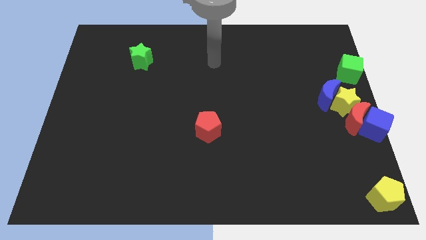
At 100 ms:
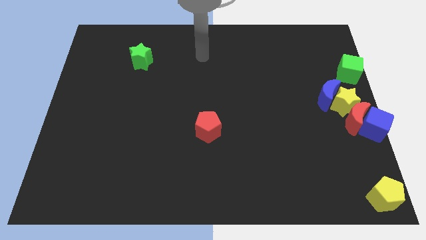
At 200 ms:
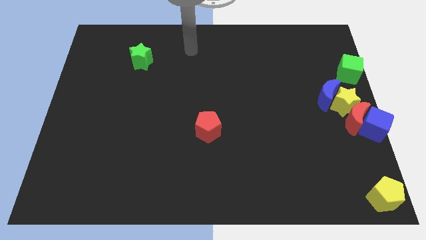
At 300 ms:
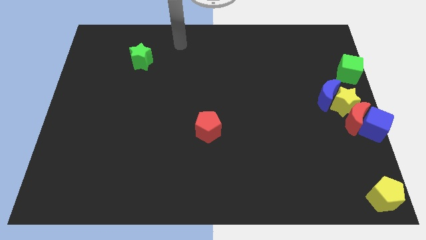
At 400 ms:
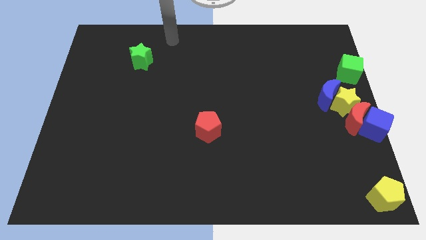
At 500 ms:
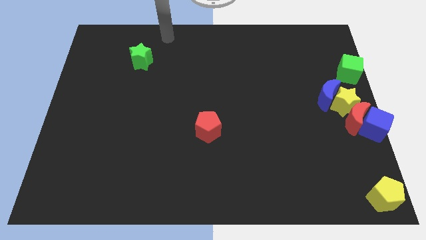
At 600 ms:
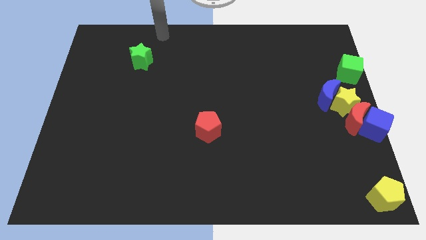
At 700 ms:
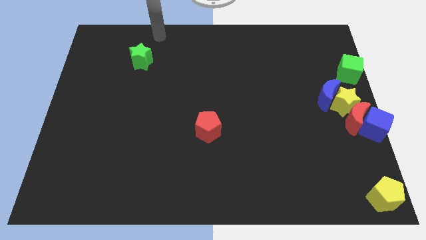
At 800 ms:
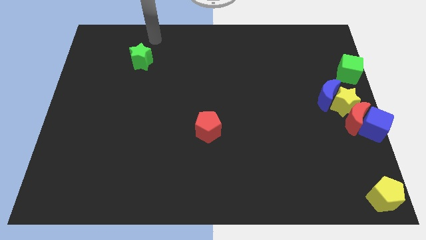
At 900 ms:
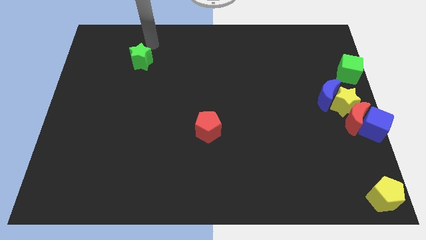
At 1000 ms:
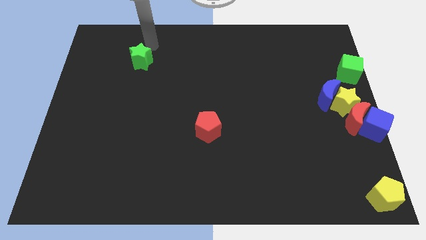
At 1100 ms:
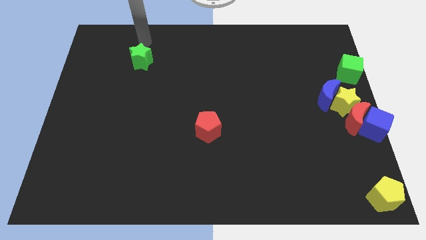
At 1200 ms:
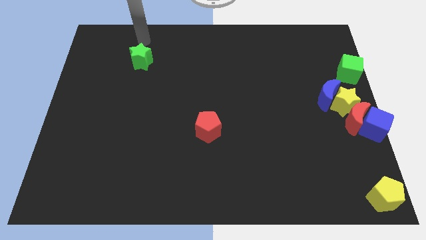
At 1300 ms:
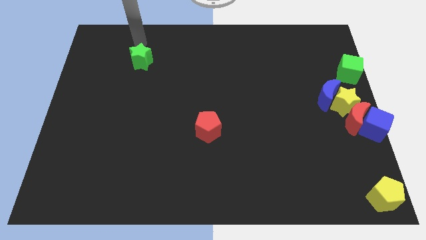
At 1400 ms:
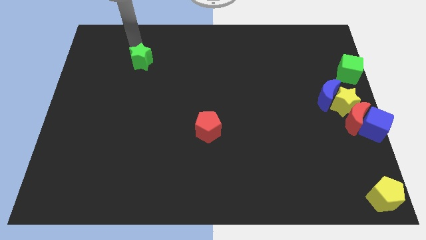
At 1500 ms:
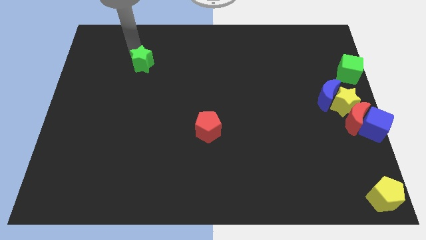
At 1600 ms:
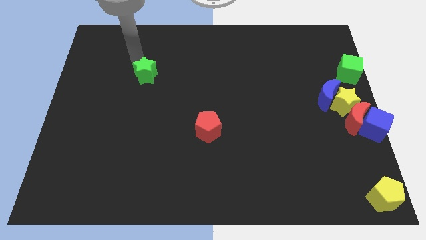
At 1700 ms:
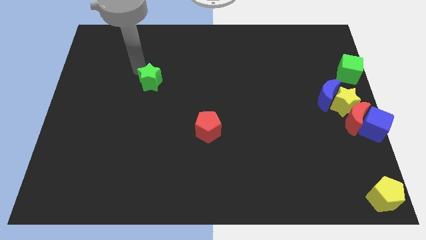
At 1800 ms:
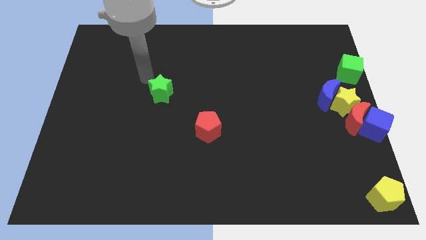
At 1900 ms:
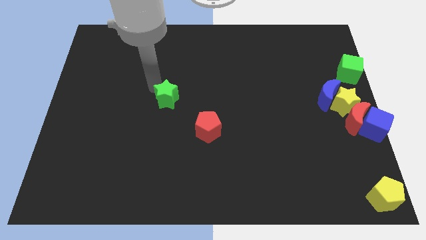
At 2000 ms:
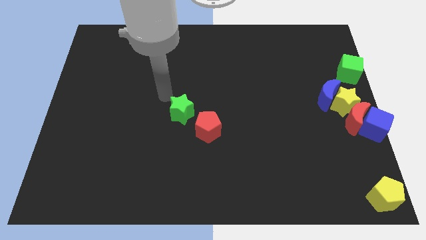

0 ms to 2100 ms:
slide the green star to the top left of the red pentagon

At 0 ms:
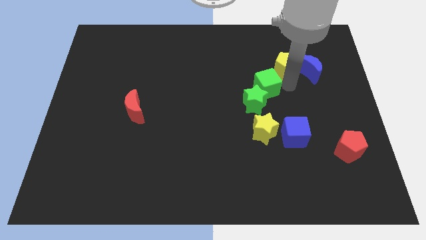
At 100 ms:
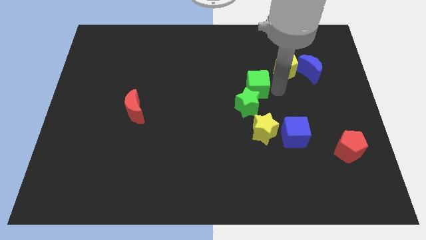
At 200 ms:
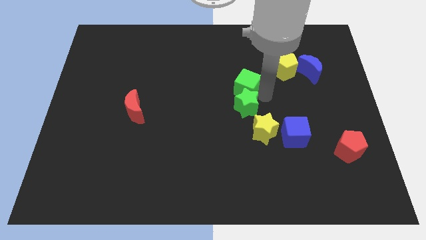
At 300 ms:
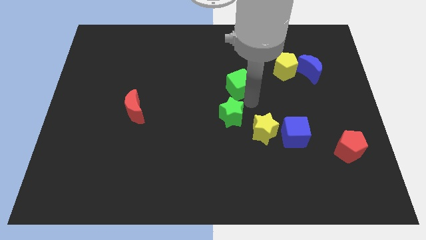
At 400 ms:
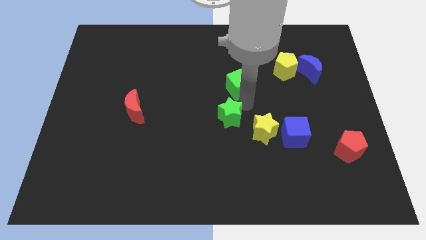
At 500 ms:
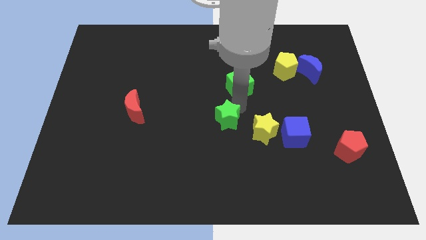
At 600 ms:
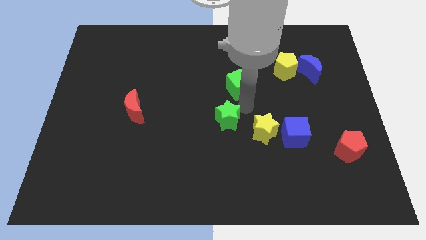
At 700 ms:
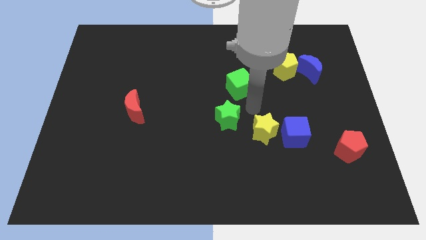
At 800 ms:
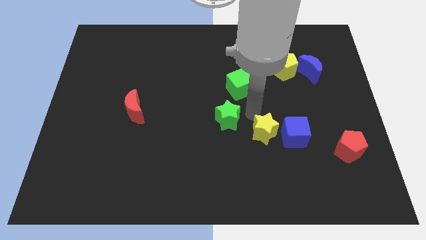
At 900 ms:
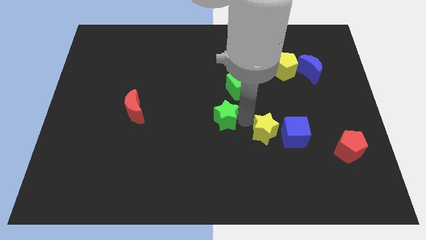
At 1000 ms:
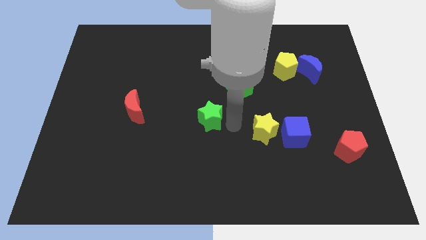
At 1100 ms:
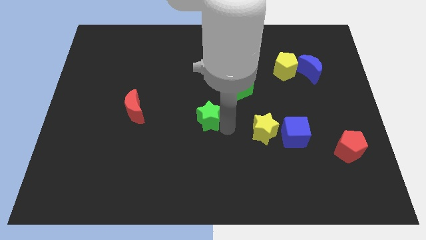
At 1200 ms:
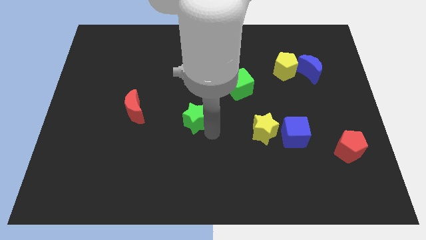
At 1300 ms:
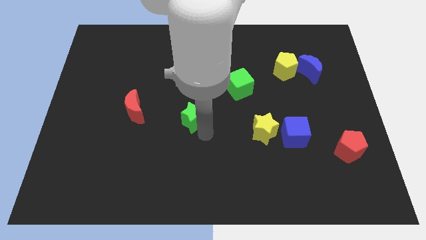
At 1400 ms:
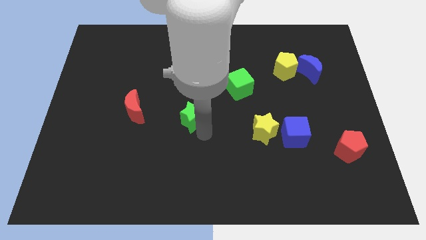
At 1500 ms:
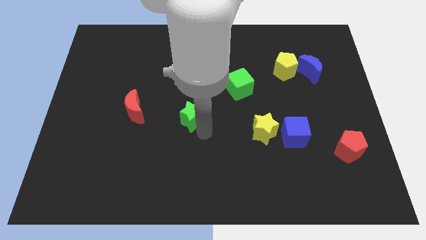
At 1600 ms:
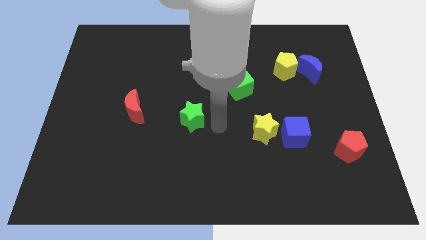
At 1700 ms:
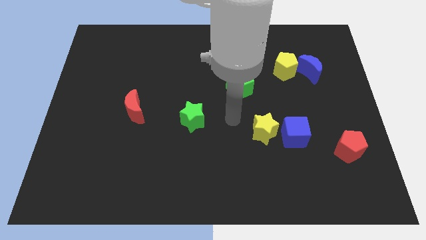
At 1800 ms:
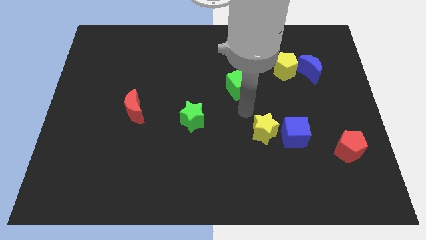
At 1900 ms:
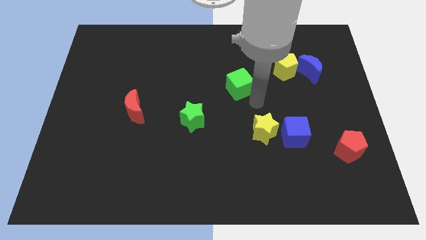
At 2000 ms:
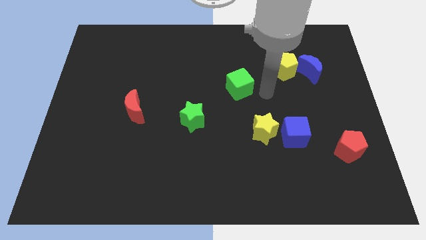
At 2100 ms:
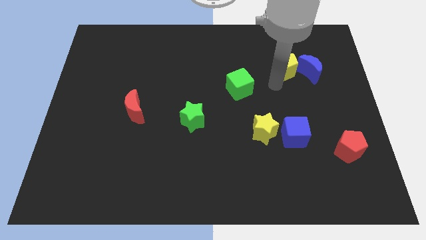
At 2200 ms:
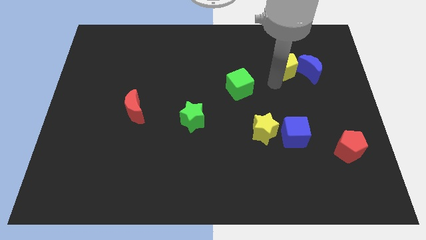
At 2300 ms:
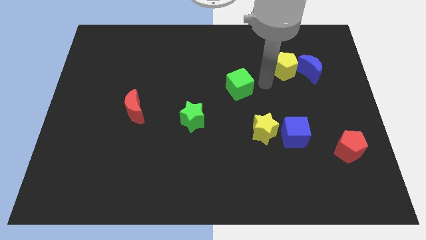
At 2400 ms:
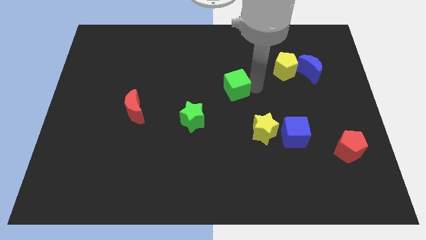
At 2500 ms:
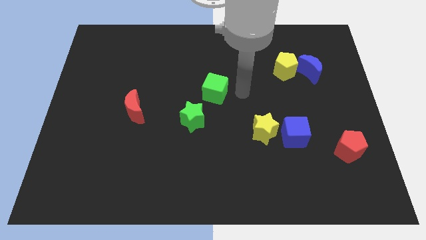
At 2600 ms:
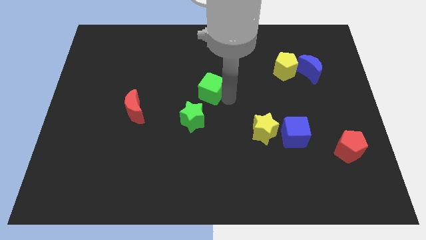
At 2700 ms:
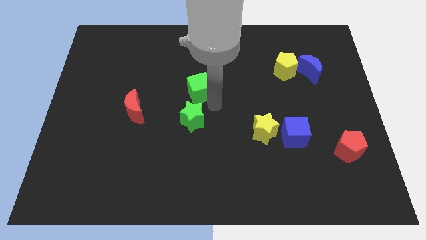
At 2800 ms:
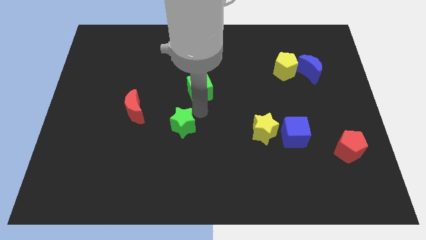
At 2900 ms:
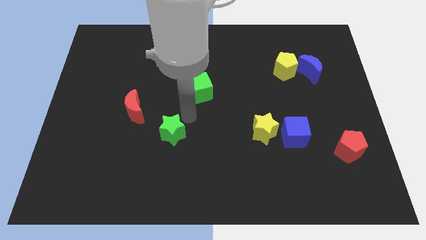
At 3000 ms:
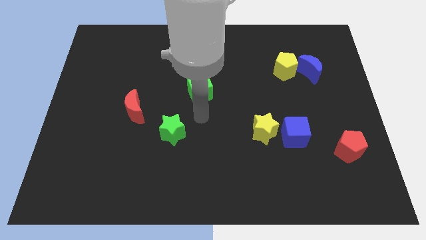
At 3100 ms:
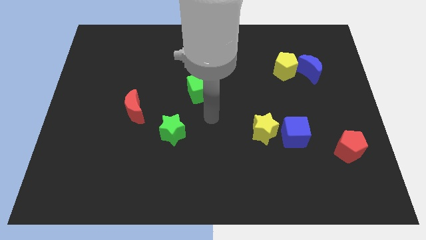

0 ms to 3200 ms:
move green star green cube parallel towards red moon

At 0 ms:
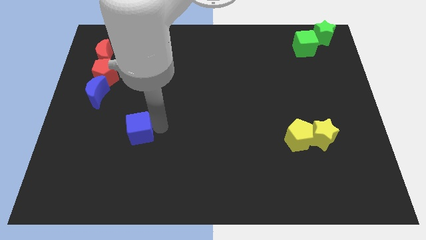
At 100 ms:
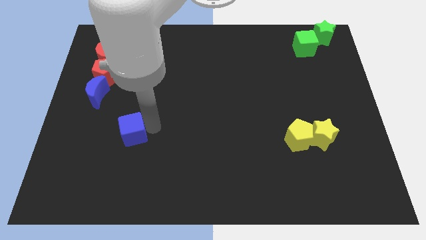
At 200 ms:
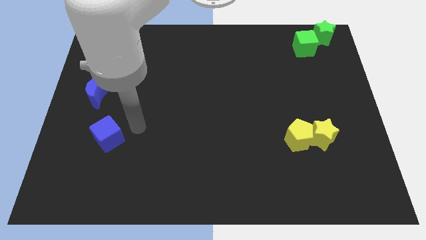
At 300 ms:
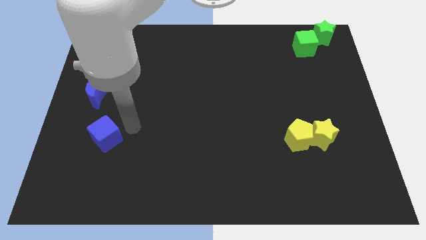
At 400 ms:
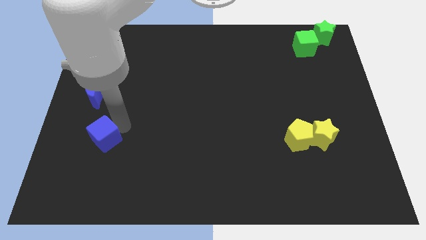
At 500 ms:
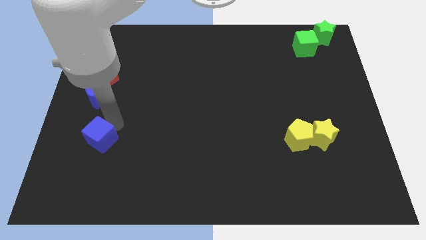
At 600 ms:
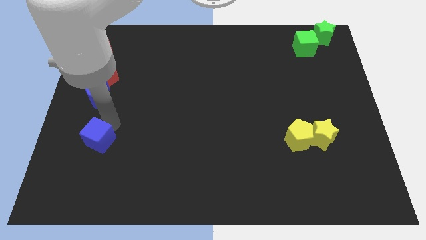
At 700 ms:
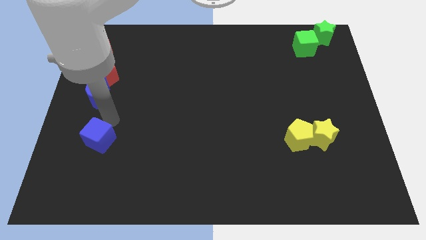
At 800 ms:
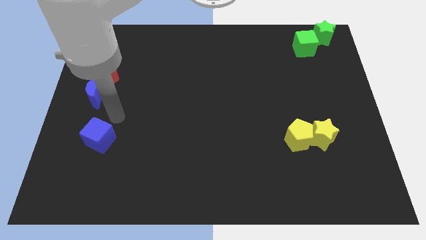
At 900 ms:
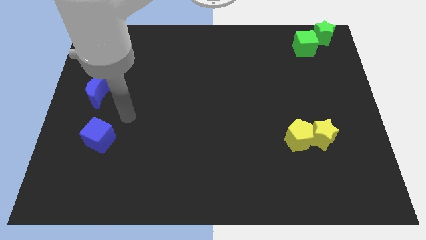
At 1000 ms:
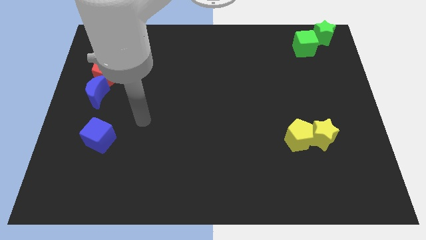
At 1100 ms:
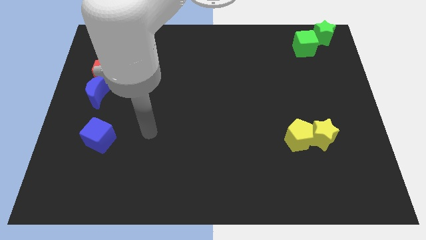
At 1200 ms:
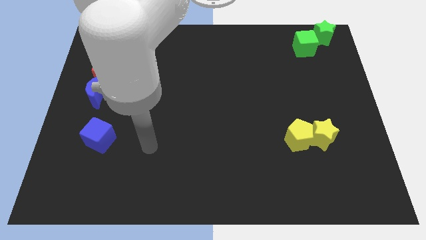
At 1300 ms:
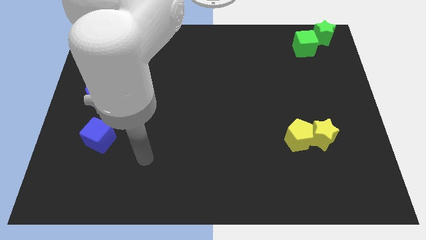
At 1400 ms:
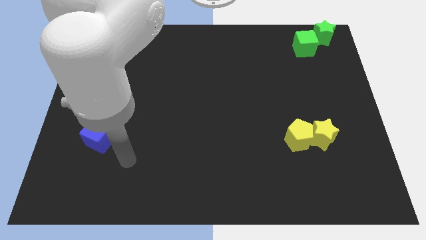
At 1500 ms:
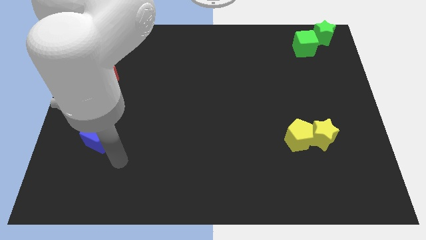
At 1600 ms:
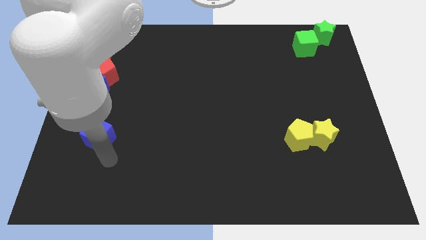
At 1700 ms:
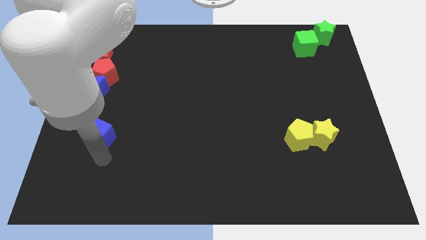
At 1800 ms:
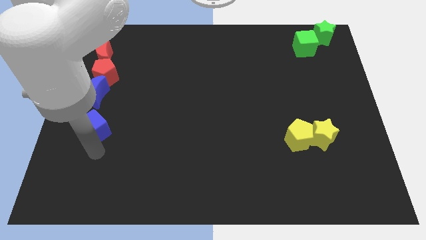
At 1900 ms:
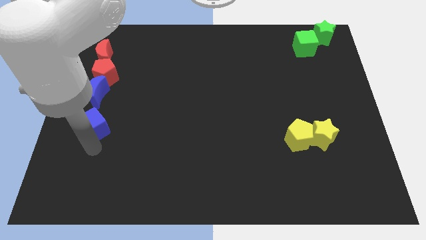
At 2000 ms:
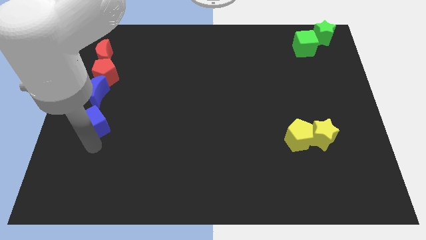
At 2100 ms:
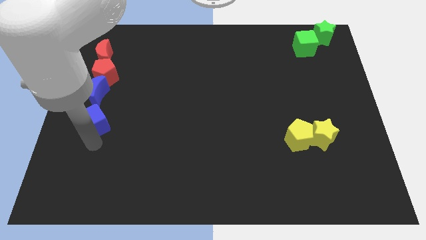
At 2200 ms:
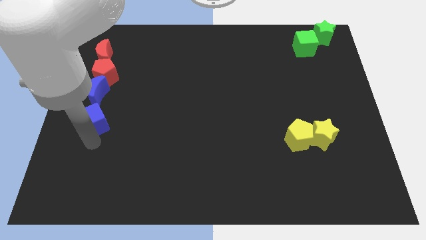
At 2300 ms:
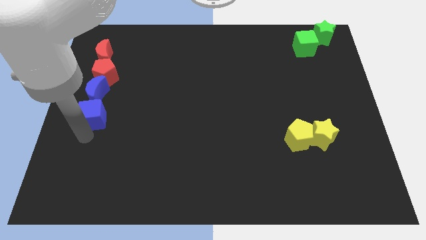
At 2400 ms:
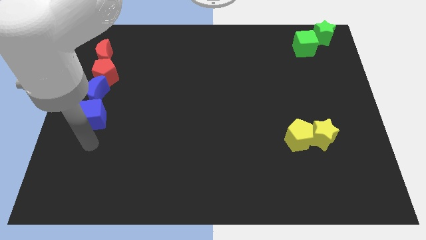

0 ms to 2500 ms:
push the blue cube below to the blue crescent

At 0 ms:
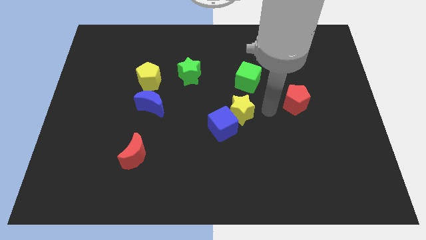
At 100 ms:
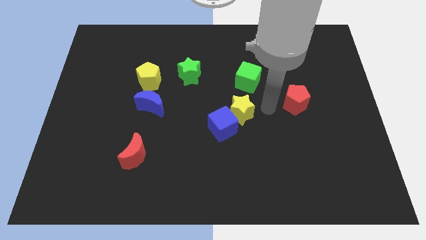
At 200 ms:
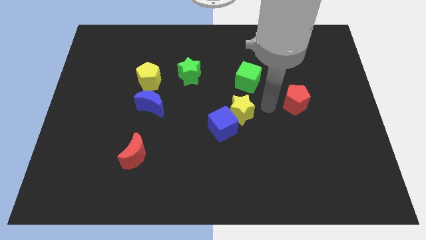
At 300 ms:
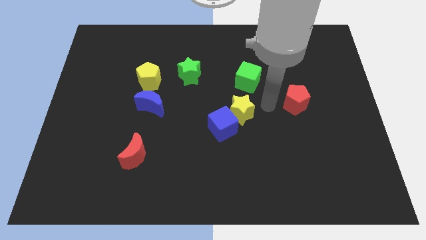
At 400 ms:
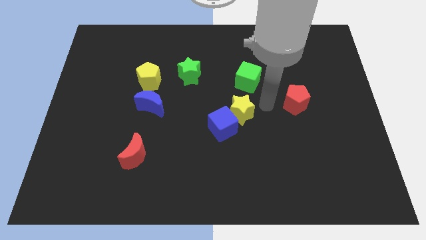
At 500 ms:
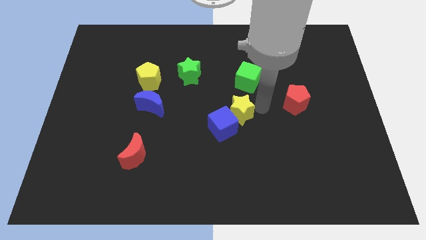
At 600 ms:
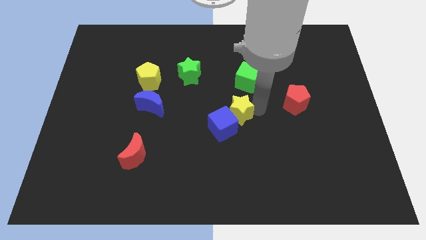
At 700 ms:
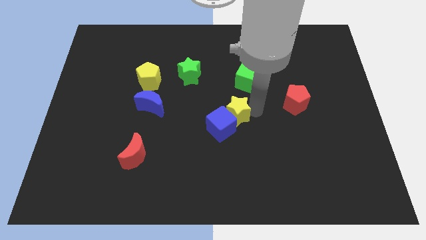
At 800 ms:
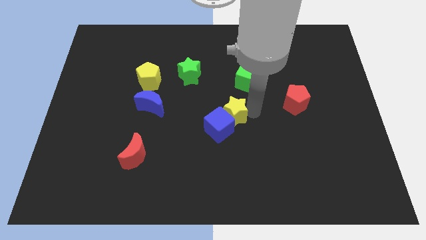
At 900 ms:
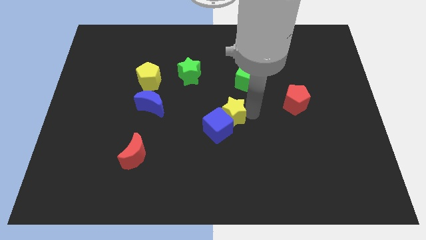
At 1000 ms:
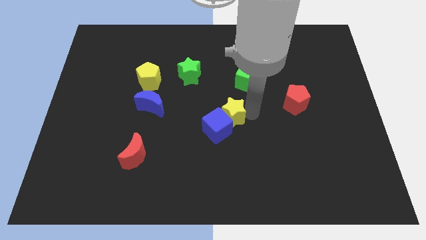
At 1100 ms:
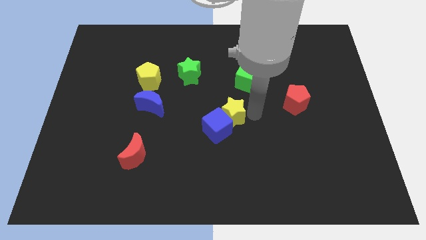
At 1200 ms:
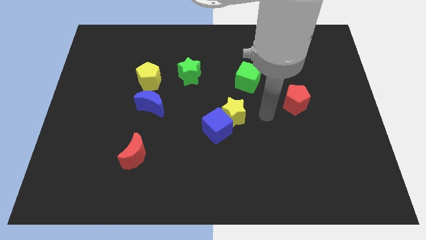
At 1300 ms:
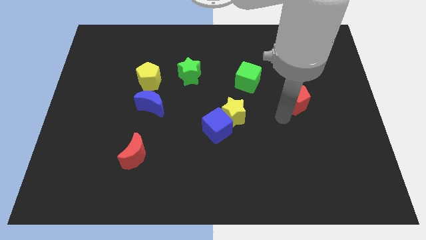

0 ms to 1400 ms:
push yellow star into blue cube
